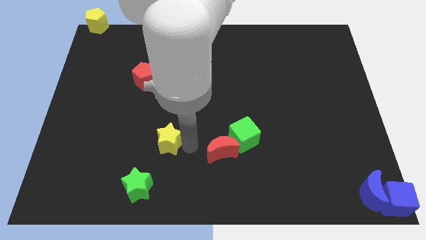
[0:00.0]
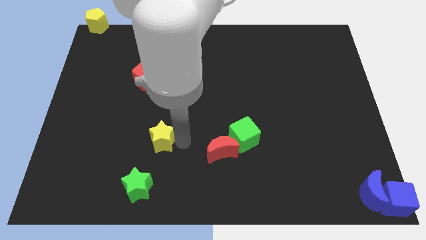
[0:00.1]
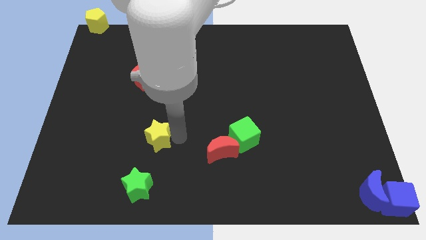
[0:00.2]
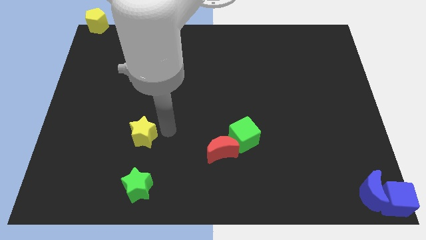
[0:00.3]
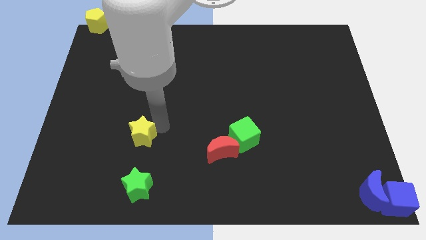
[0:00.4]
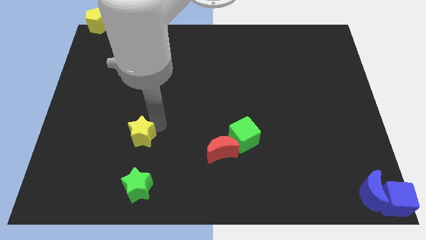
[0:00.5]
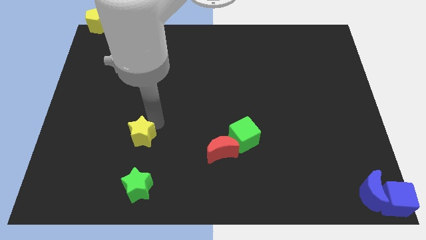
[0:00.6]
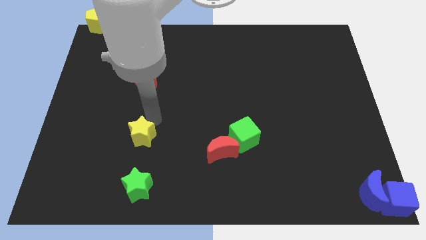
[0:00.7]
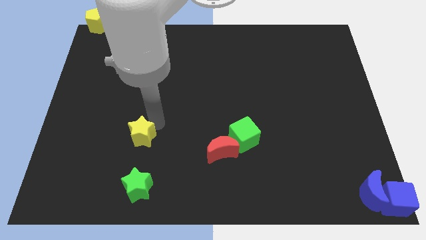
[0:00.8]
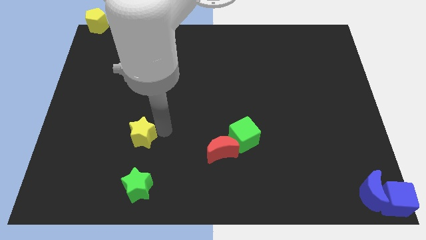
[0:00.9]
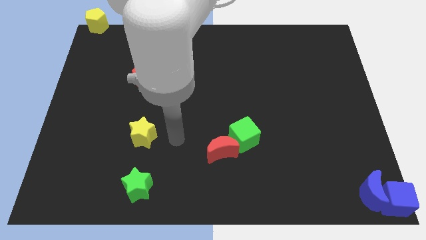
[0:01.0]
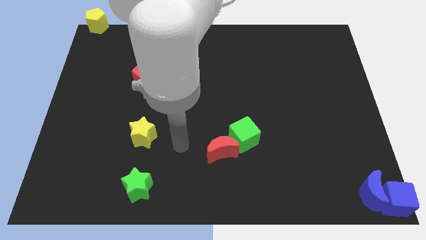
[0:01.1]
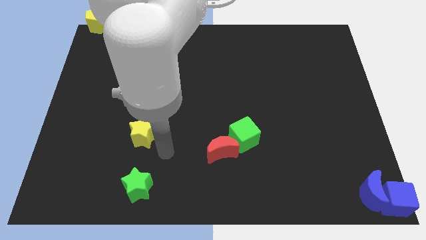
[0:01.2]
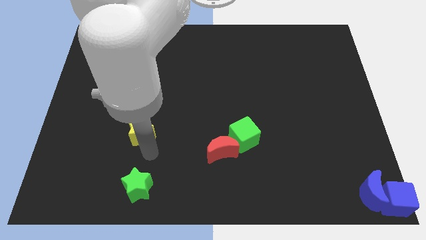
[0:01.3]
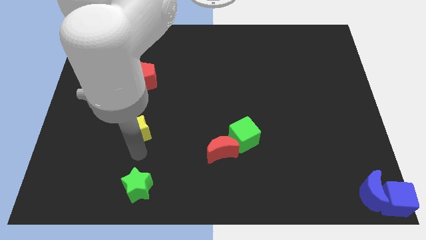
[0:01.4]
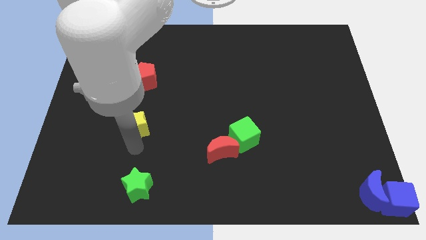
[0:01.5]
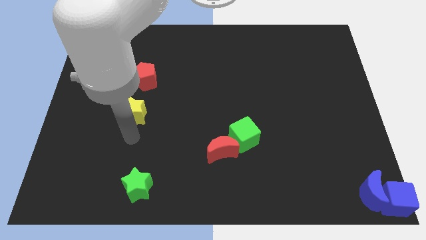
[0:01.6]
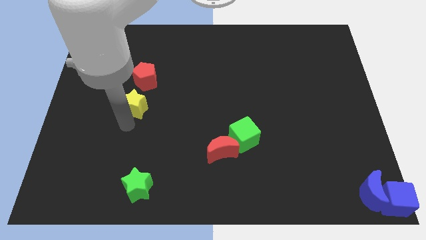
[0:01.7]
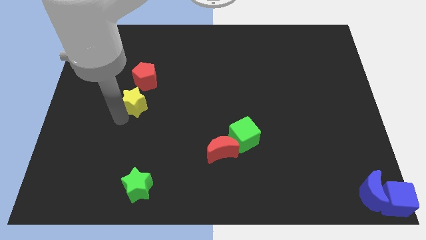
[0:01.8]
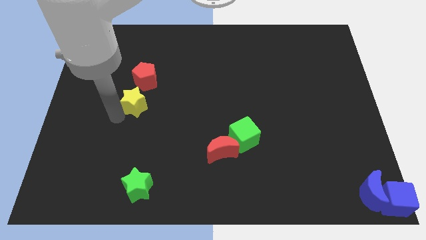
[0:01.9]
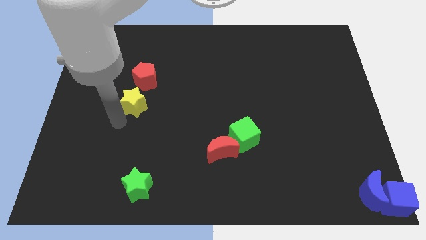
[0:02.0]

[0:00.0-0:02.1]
slide the yellow star below the red pentagon

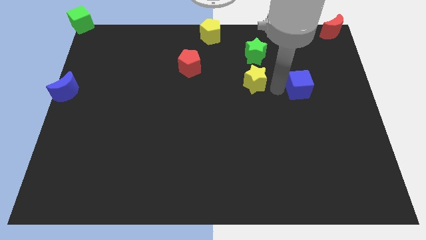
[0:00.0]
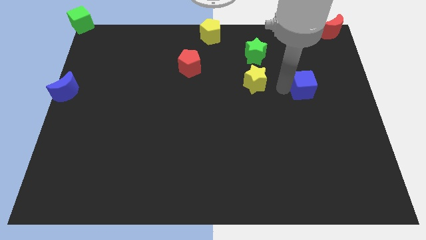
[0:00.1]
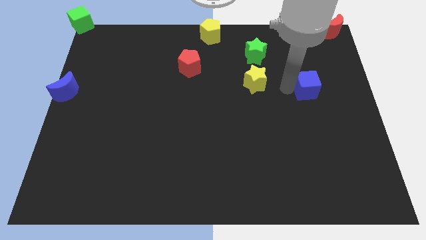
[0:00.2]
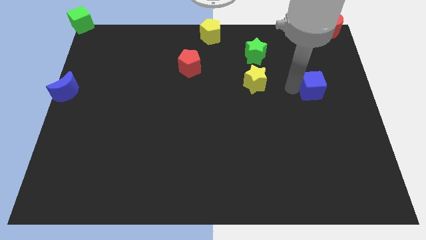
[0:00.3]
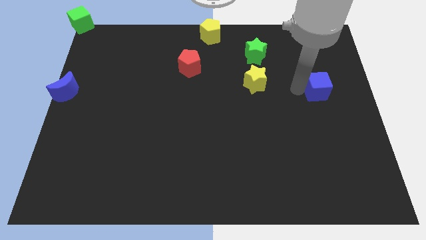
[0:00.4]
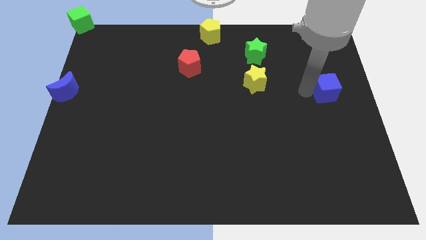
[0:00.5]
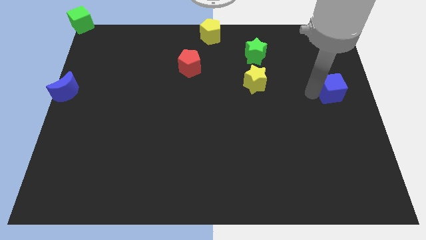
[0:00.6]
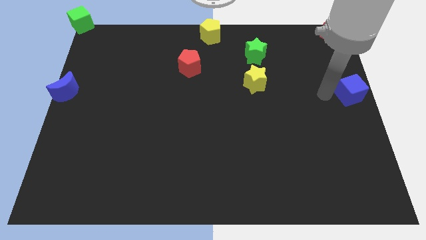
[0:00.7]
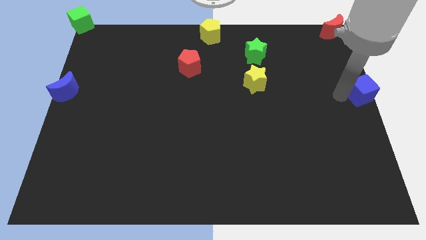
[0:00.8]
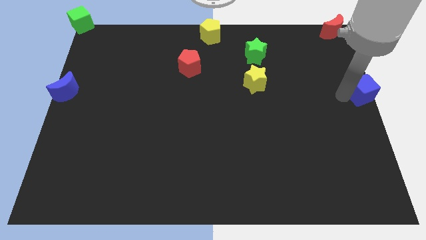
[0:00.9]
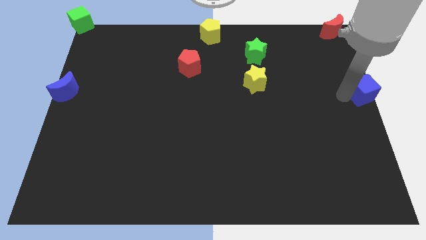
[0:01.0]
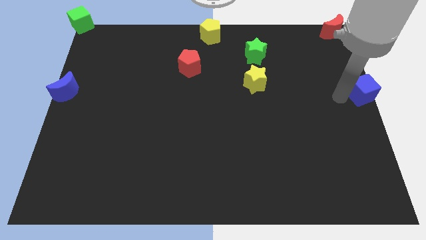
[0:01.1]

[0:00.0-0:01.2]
move the blue cube towards the right center of the board

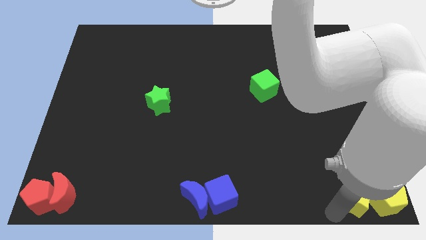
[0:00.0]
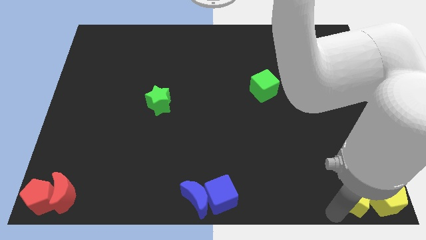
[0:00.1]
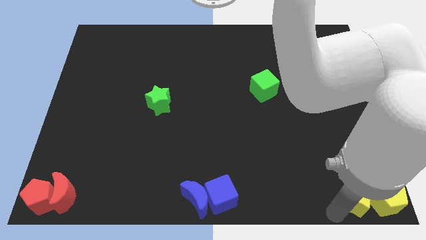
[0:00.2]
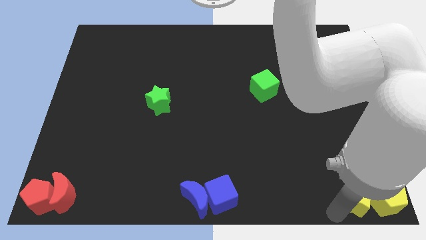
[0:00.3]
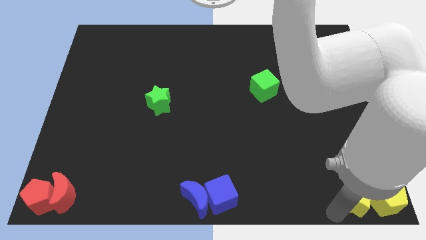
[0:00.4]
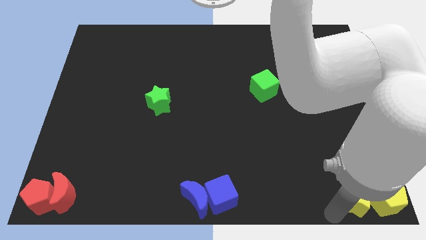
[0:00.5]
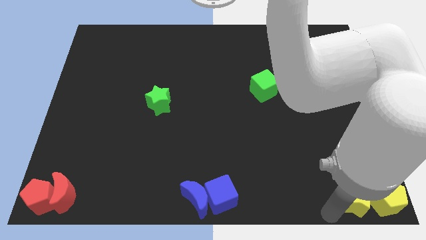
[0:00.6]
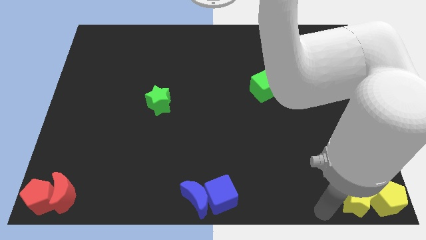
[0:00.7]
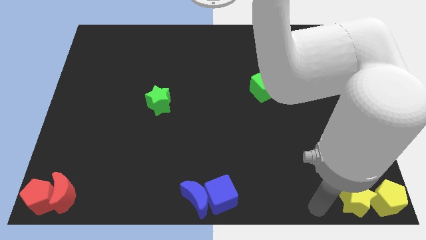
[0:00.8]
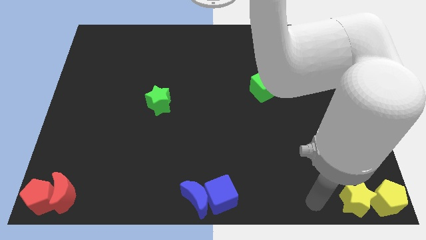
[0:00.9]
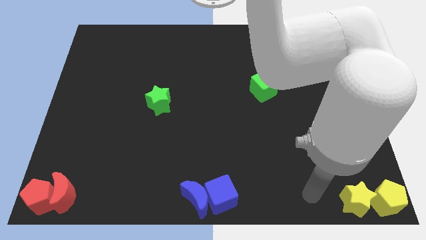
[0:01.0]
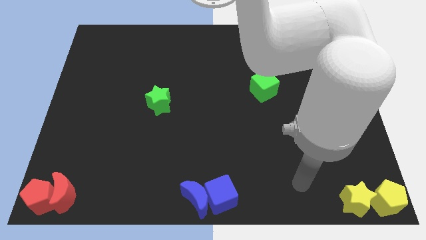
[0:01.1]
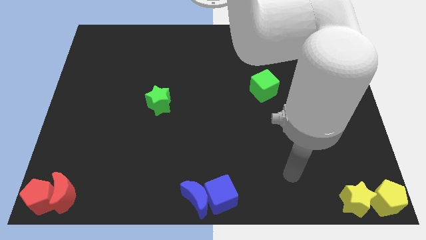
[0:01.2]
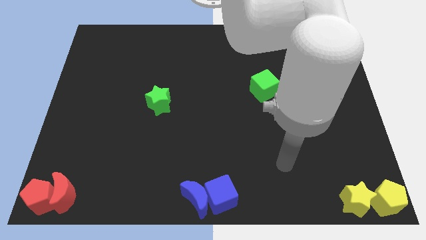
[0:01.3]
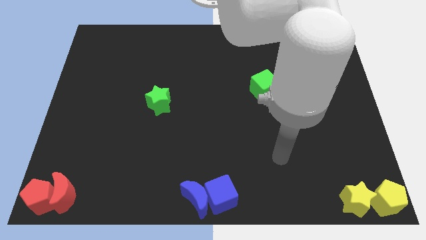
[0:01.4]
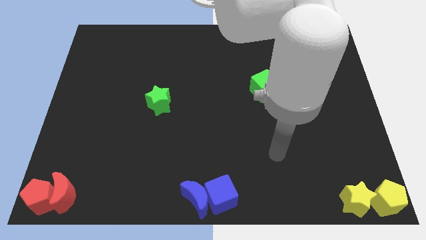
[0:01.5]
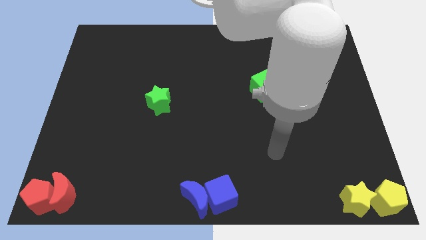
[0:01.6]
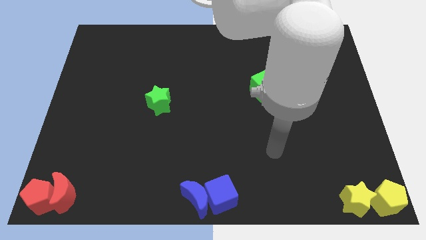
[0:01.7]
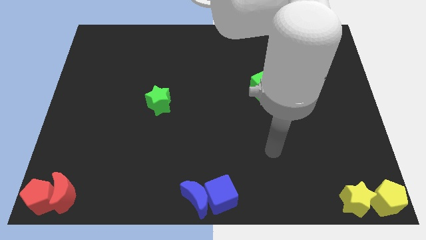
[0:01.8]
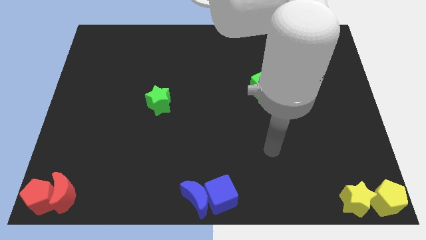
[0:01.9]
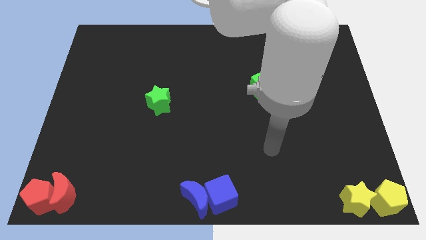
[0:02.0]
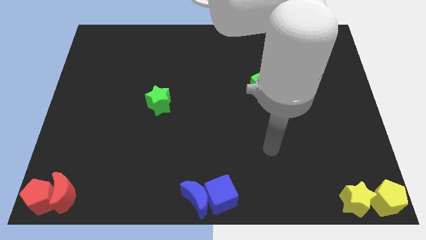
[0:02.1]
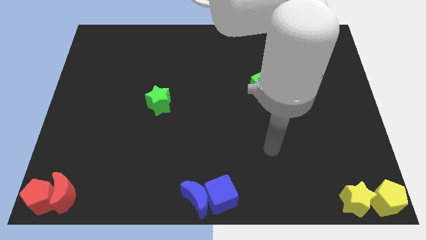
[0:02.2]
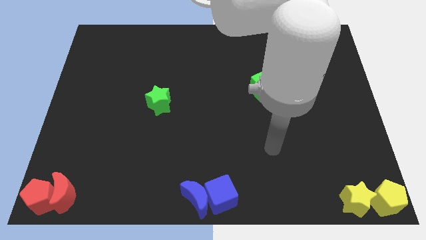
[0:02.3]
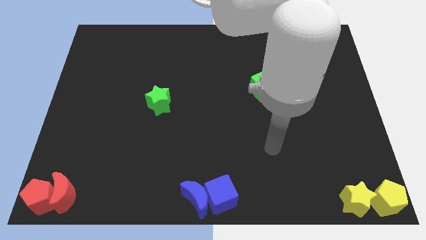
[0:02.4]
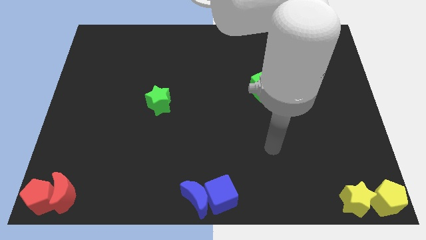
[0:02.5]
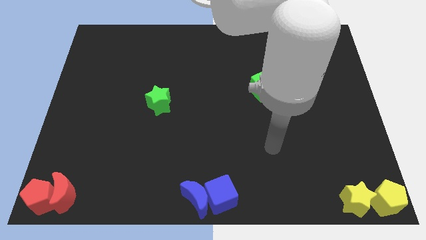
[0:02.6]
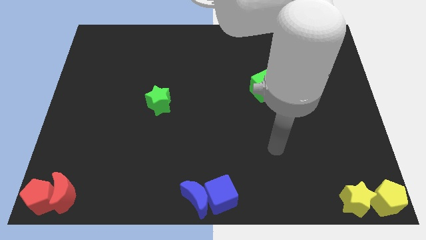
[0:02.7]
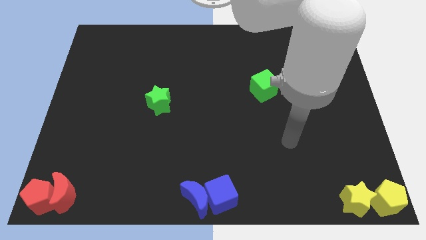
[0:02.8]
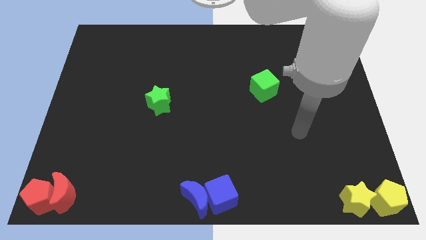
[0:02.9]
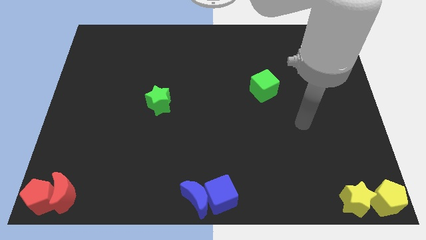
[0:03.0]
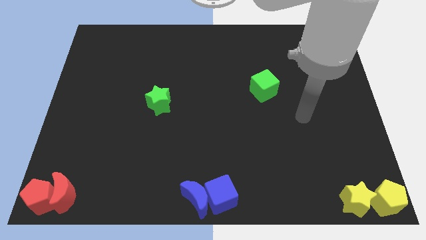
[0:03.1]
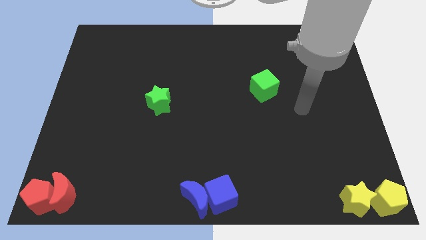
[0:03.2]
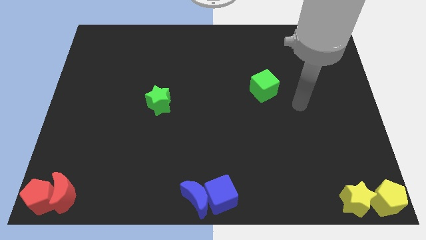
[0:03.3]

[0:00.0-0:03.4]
move your arm towards right of the green cube

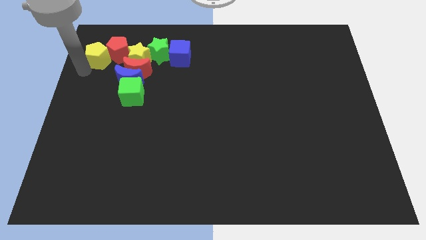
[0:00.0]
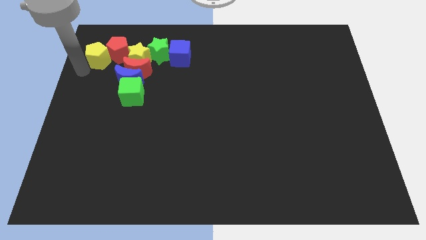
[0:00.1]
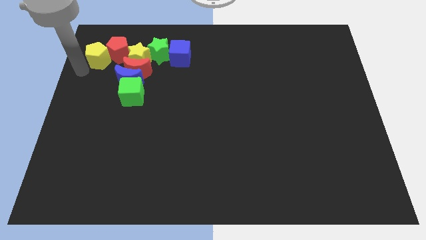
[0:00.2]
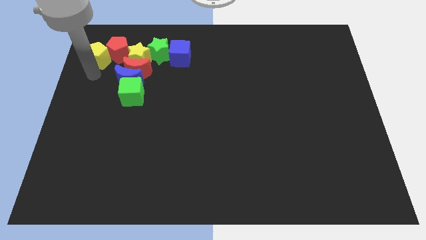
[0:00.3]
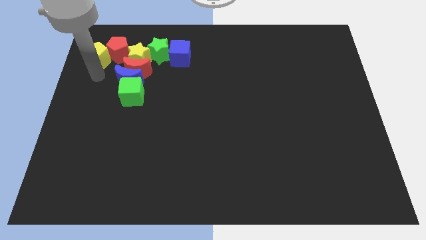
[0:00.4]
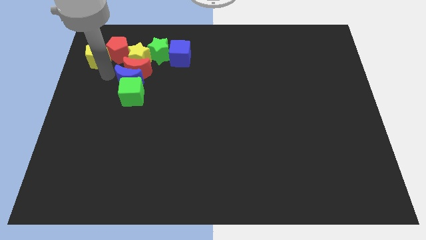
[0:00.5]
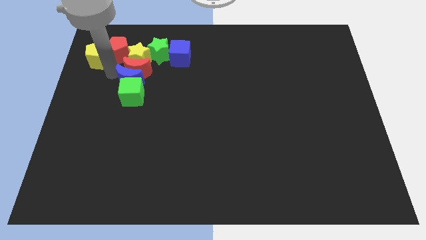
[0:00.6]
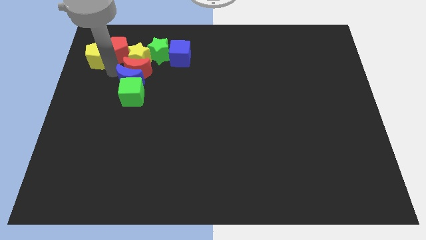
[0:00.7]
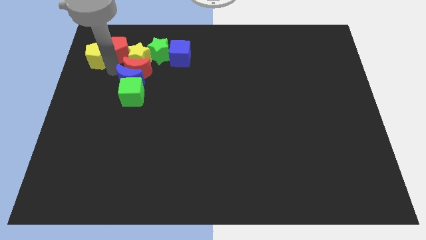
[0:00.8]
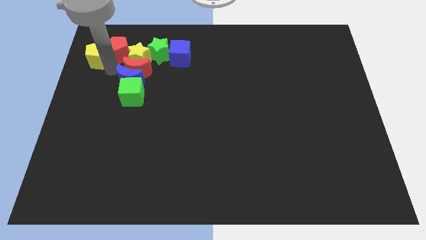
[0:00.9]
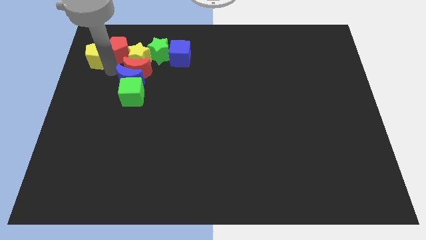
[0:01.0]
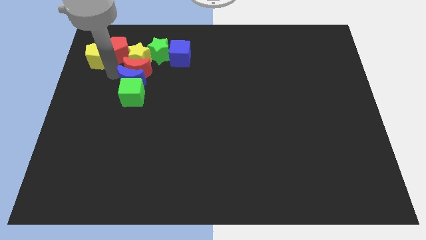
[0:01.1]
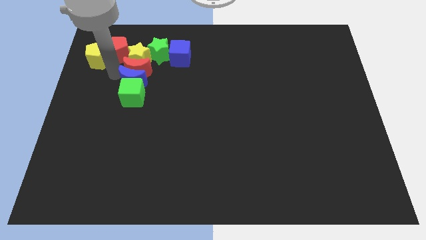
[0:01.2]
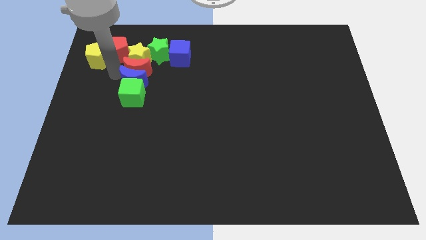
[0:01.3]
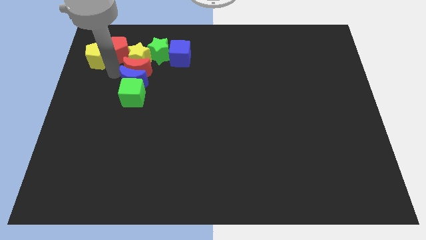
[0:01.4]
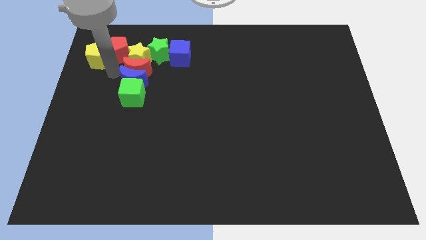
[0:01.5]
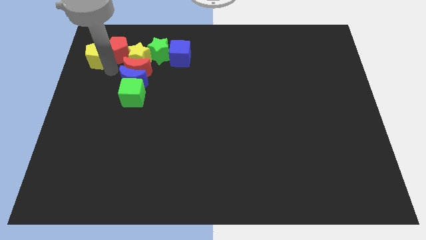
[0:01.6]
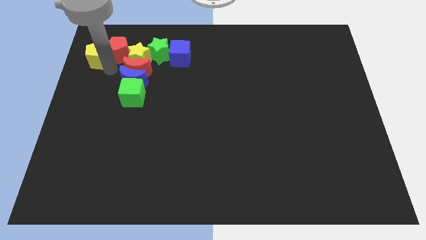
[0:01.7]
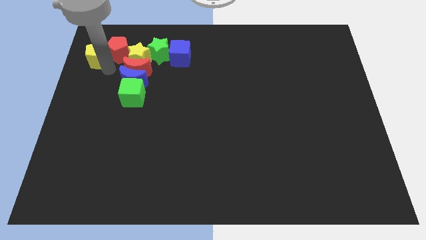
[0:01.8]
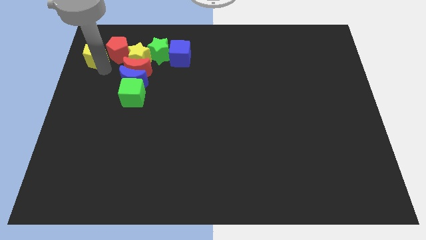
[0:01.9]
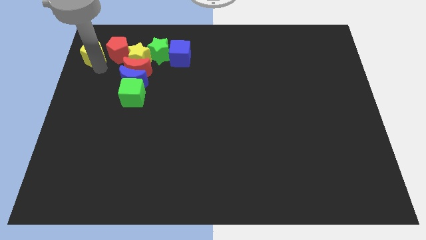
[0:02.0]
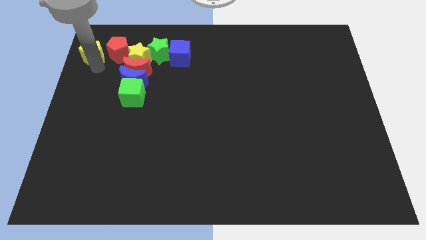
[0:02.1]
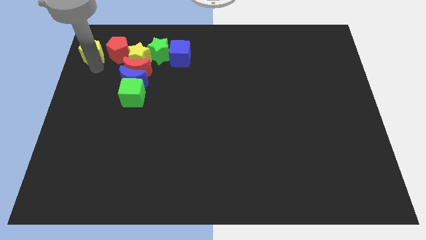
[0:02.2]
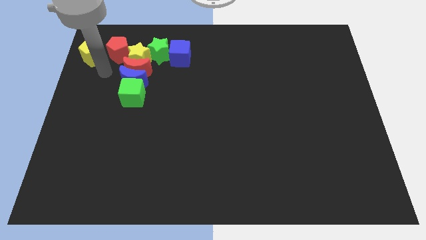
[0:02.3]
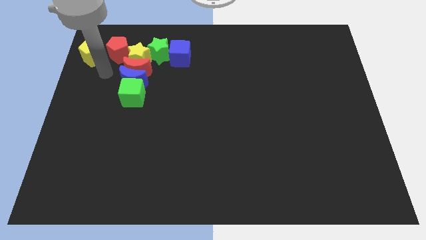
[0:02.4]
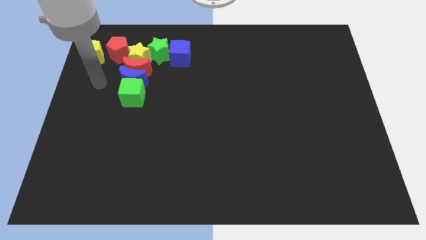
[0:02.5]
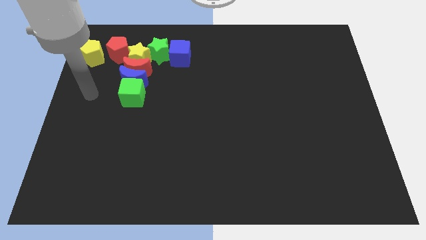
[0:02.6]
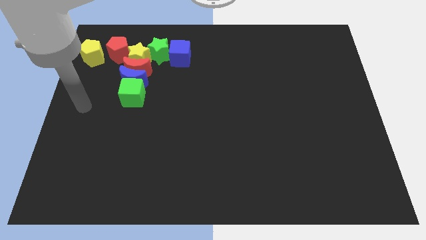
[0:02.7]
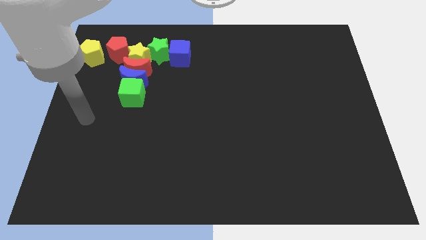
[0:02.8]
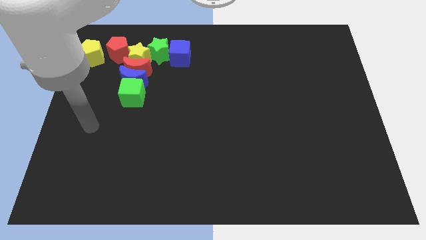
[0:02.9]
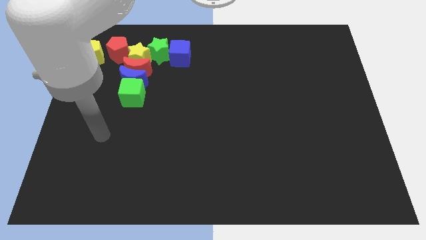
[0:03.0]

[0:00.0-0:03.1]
separate the yellow pentagon from the red pentagon
